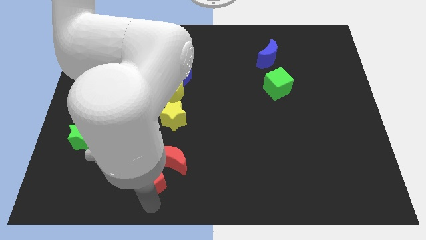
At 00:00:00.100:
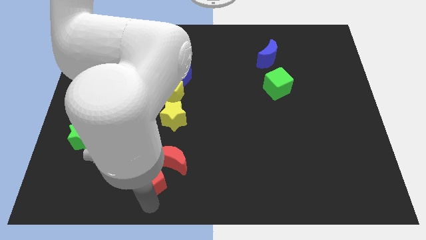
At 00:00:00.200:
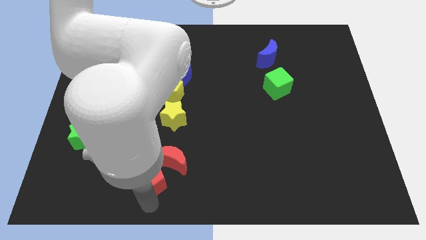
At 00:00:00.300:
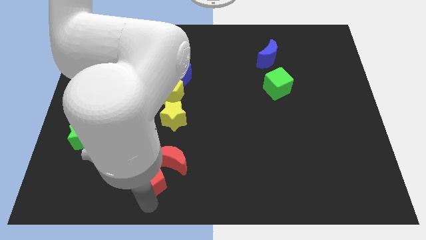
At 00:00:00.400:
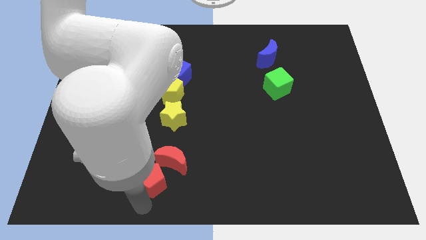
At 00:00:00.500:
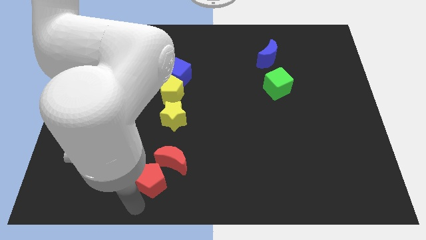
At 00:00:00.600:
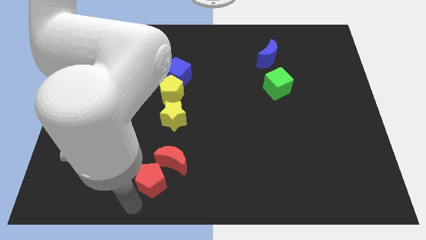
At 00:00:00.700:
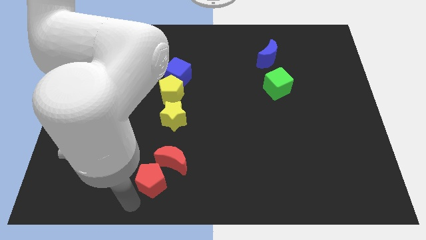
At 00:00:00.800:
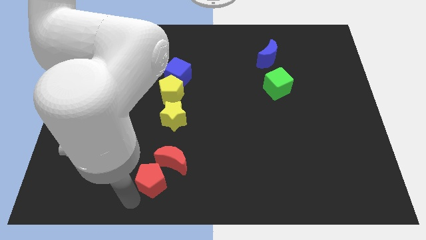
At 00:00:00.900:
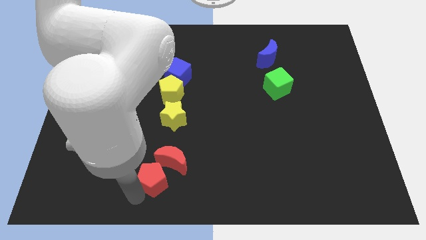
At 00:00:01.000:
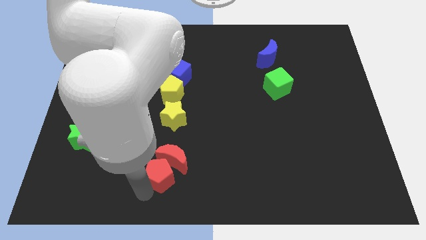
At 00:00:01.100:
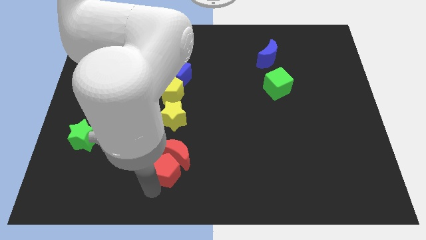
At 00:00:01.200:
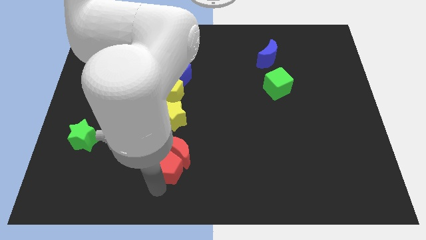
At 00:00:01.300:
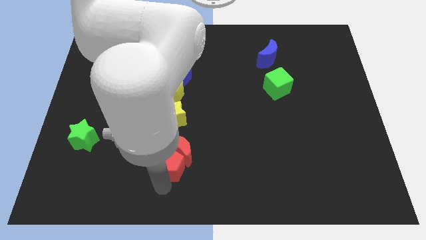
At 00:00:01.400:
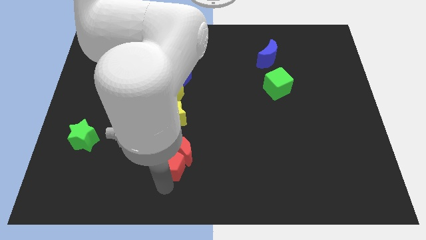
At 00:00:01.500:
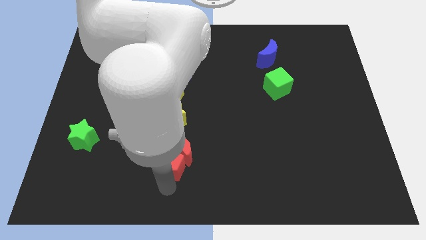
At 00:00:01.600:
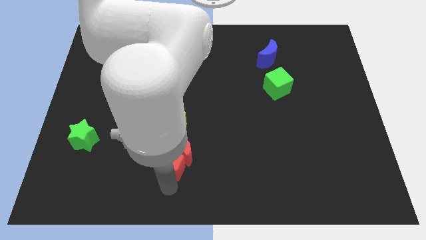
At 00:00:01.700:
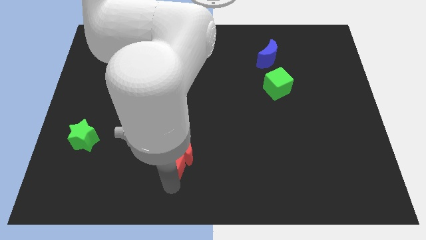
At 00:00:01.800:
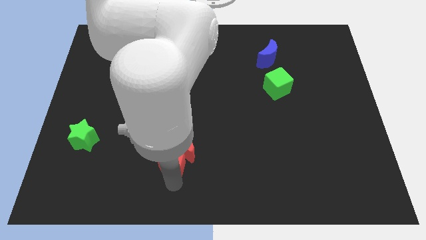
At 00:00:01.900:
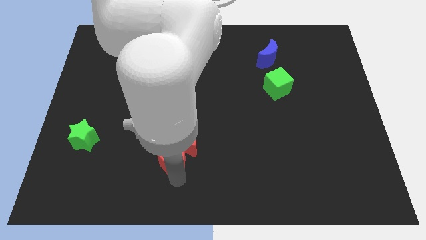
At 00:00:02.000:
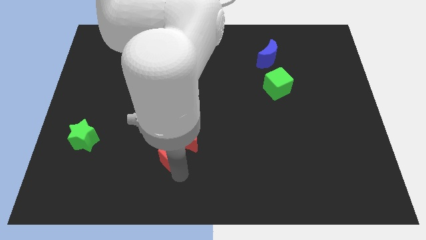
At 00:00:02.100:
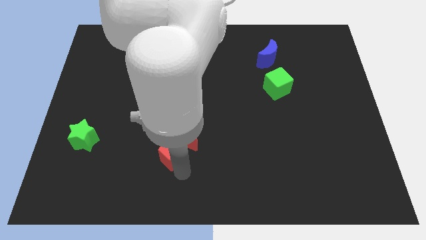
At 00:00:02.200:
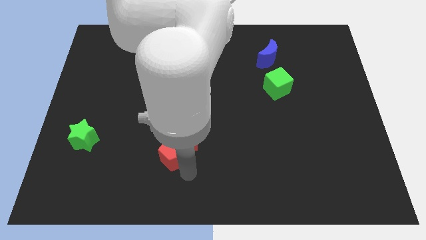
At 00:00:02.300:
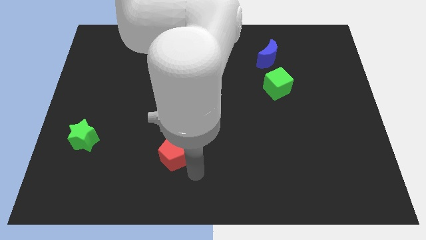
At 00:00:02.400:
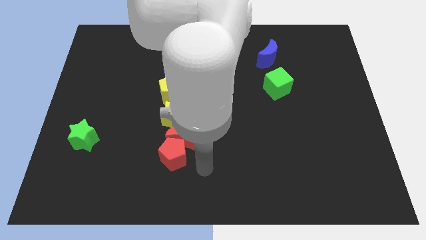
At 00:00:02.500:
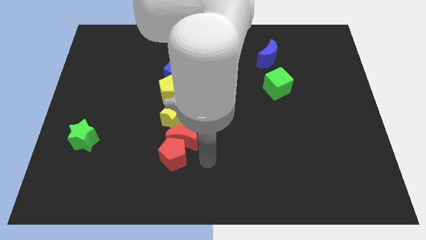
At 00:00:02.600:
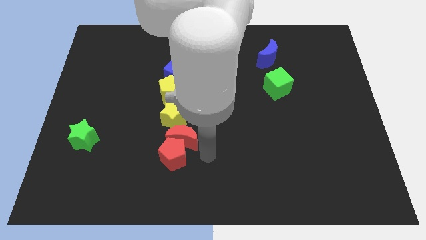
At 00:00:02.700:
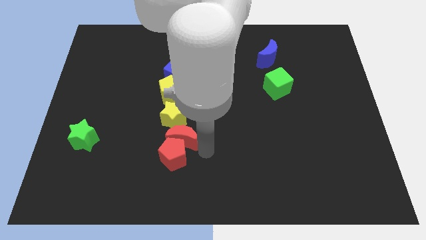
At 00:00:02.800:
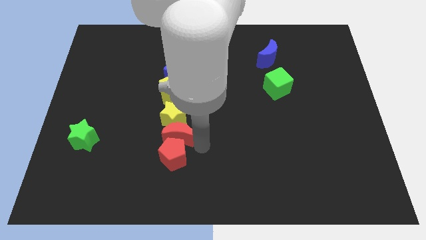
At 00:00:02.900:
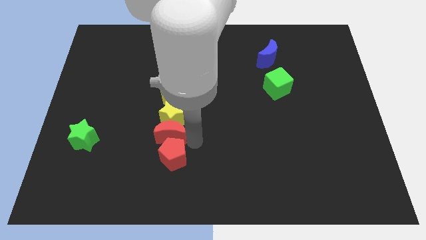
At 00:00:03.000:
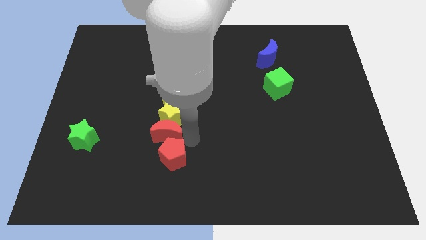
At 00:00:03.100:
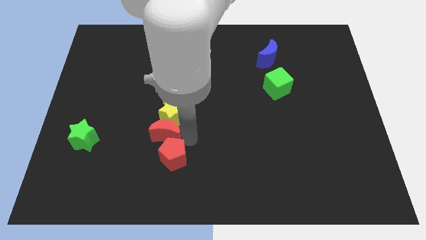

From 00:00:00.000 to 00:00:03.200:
slide the red pentagon vertically at the bottom of the red crescent

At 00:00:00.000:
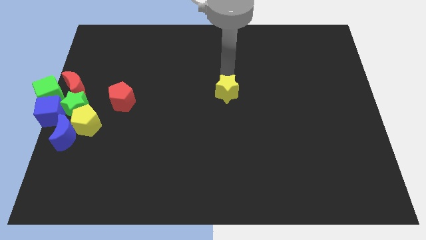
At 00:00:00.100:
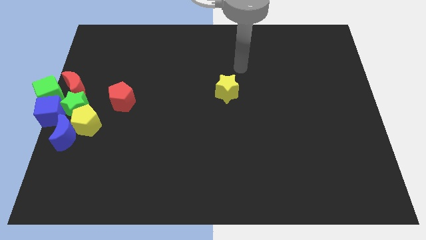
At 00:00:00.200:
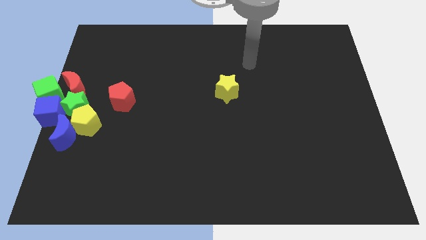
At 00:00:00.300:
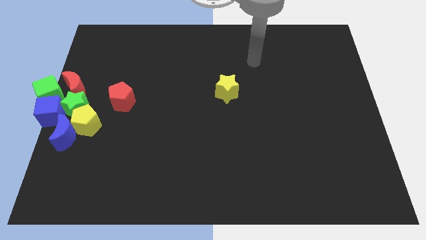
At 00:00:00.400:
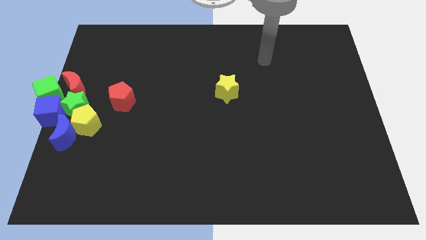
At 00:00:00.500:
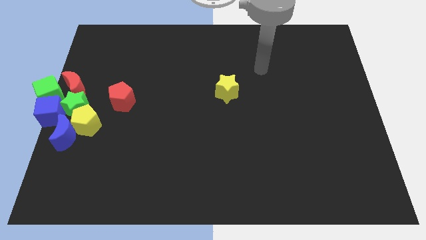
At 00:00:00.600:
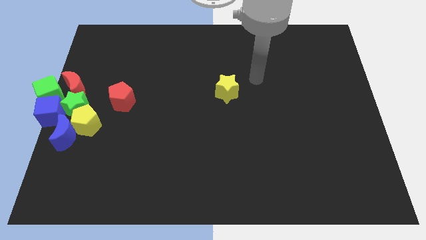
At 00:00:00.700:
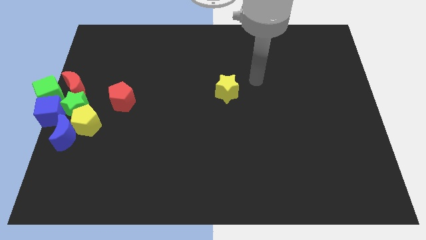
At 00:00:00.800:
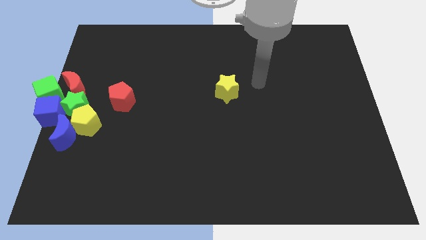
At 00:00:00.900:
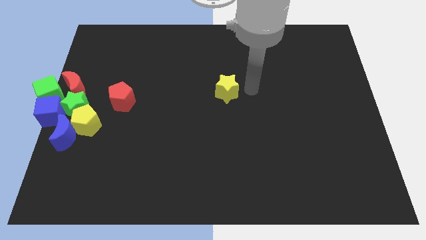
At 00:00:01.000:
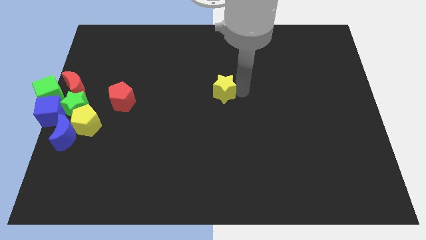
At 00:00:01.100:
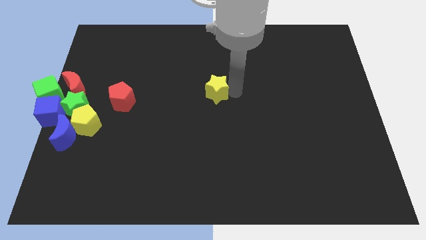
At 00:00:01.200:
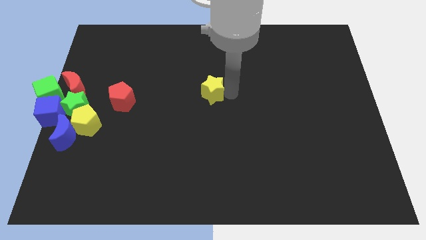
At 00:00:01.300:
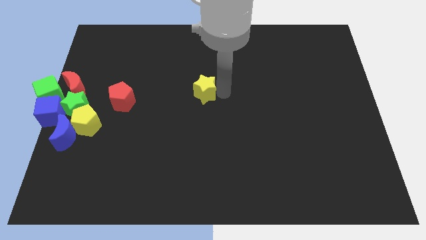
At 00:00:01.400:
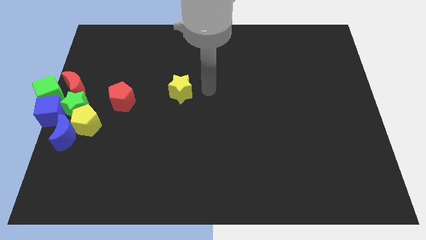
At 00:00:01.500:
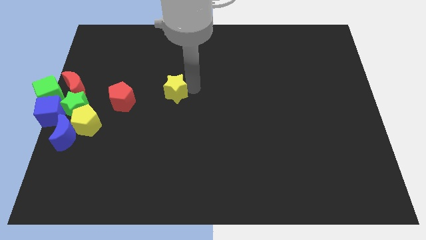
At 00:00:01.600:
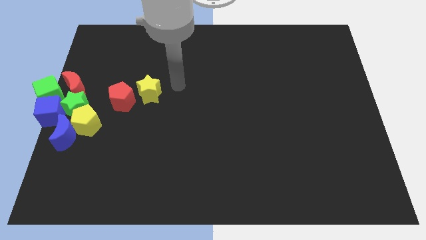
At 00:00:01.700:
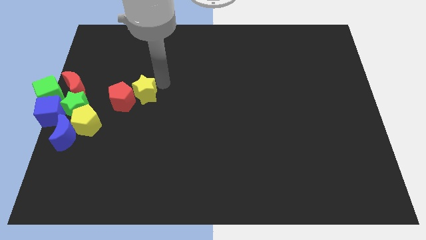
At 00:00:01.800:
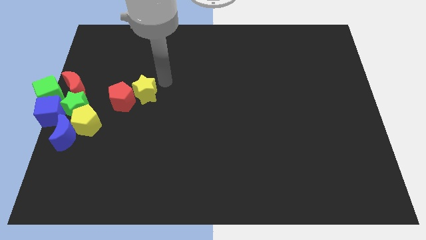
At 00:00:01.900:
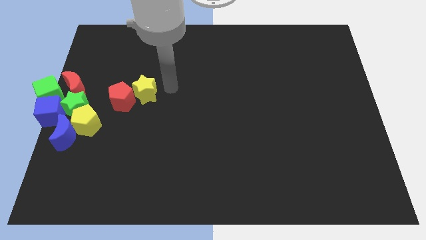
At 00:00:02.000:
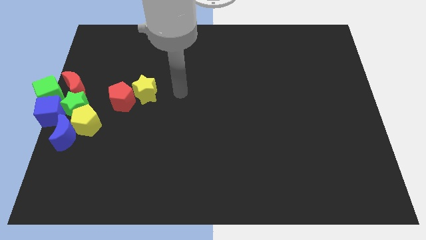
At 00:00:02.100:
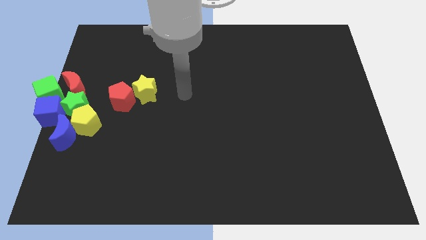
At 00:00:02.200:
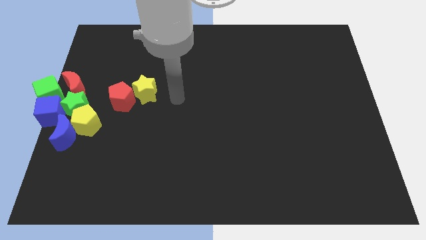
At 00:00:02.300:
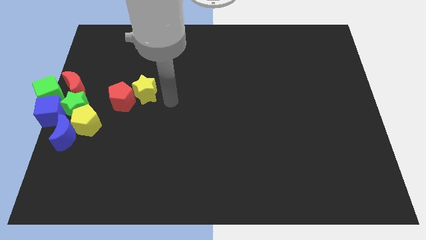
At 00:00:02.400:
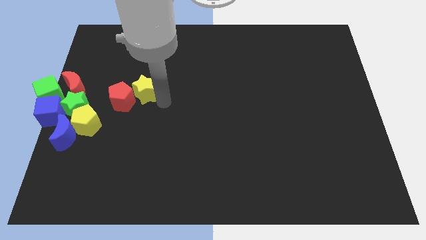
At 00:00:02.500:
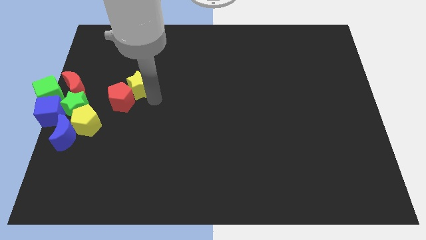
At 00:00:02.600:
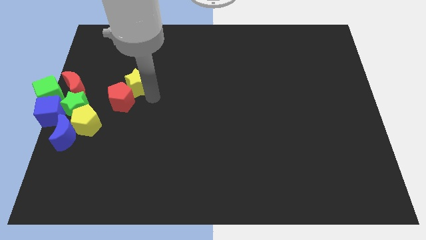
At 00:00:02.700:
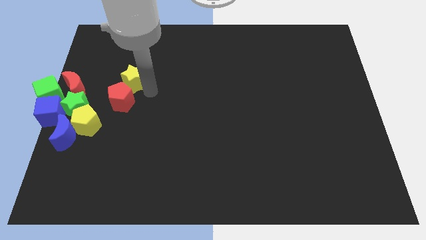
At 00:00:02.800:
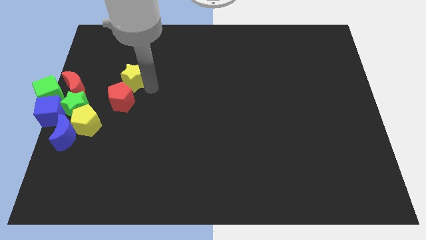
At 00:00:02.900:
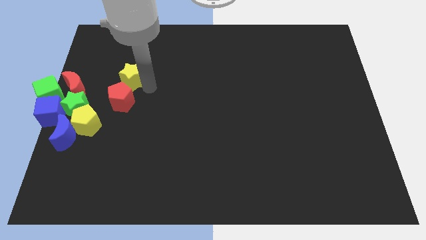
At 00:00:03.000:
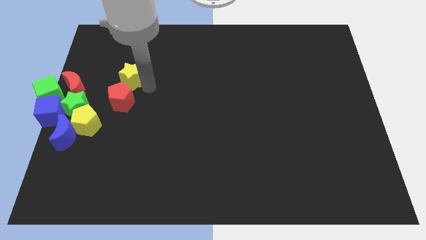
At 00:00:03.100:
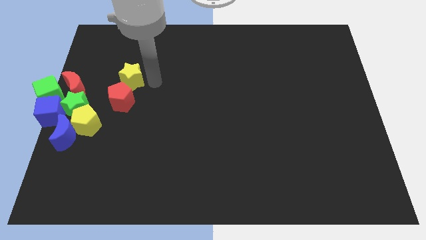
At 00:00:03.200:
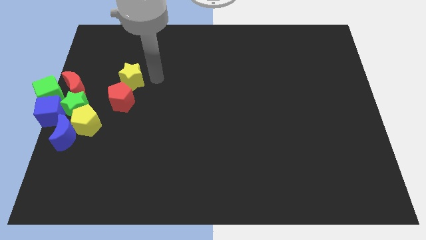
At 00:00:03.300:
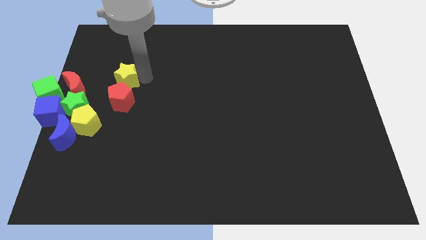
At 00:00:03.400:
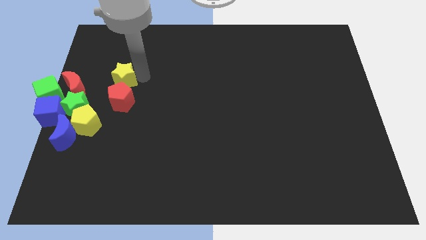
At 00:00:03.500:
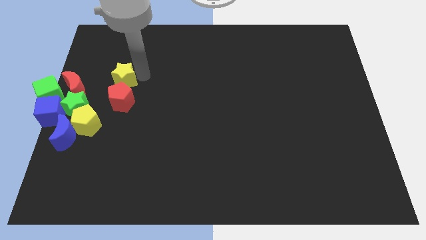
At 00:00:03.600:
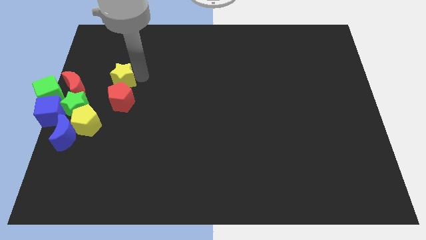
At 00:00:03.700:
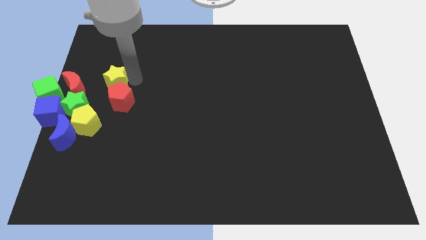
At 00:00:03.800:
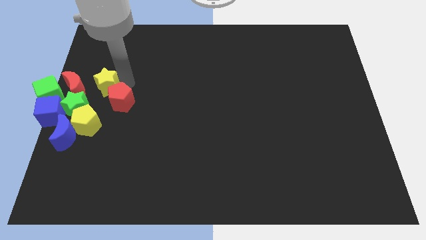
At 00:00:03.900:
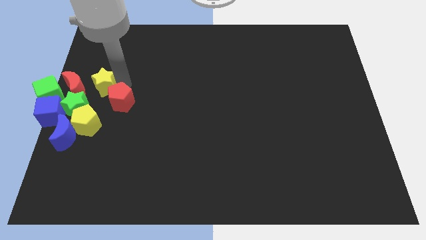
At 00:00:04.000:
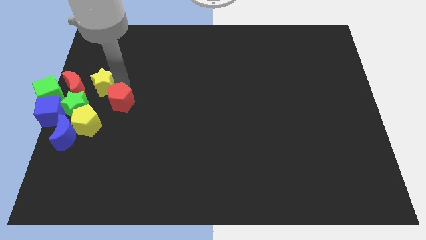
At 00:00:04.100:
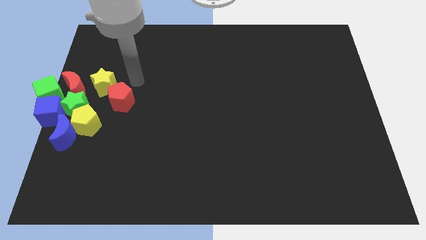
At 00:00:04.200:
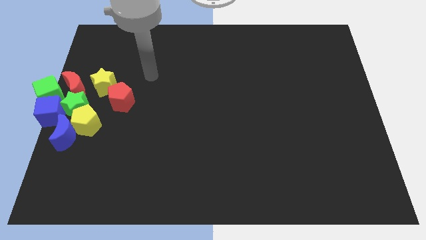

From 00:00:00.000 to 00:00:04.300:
place the yellow star diagonally top left of the red pentagon

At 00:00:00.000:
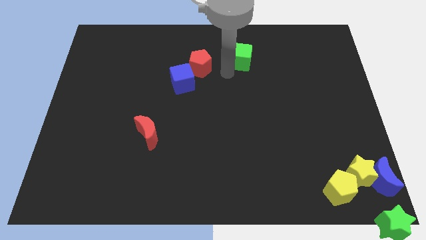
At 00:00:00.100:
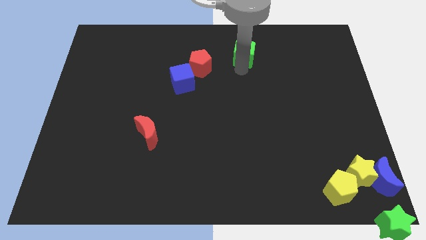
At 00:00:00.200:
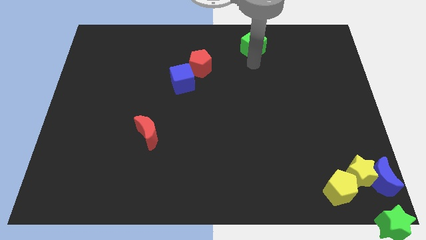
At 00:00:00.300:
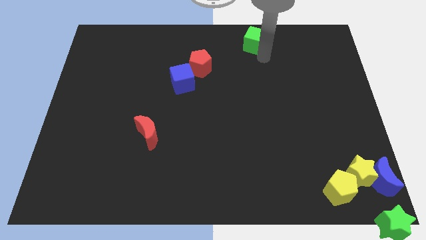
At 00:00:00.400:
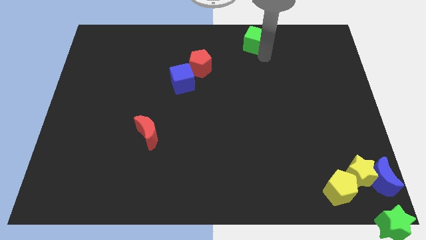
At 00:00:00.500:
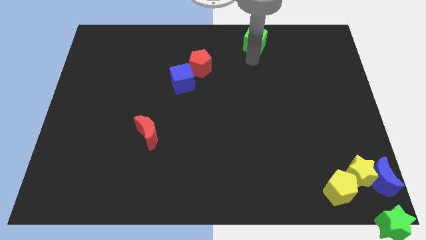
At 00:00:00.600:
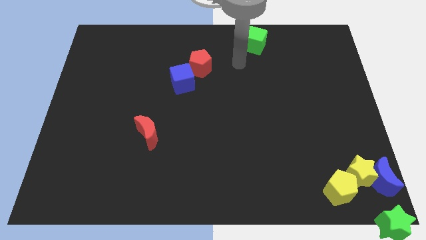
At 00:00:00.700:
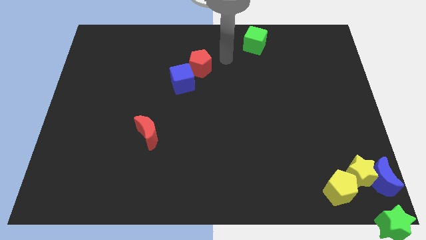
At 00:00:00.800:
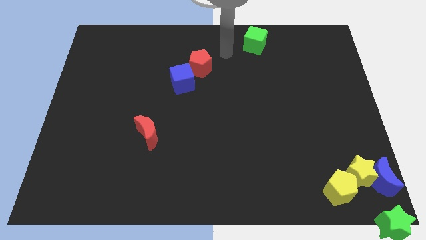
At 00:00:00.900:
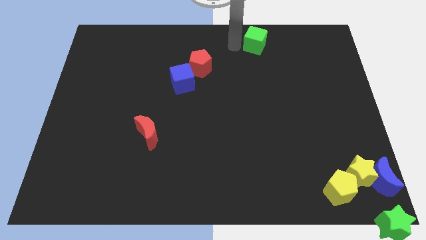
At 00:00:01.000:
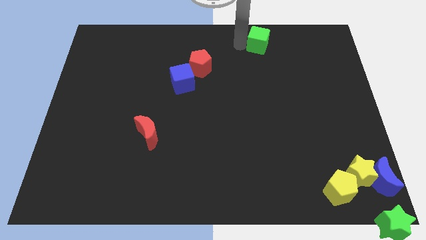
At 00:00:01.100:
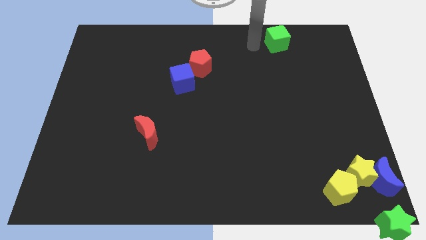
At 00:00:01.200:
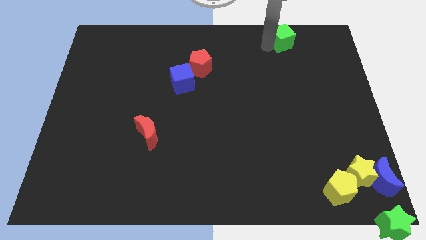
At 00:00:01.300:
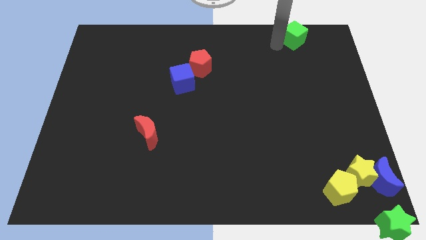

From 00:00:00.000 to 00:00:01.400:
slide the green cube towards the top right
